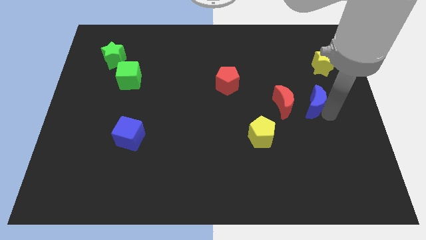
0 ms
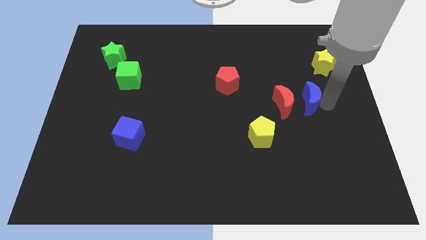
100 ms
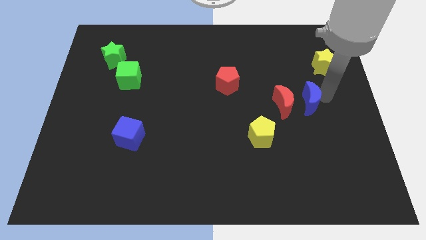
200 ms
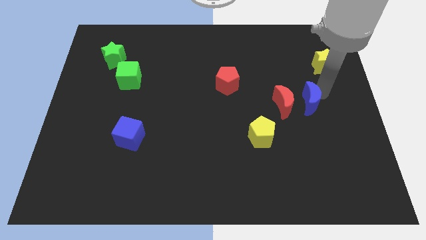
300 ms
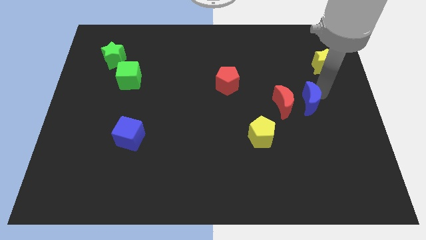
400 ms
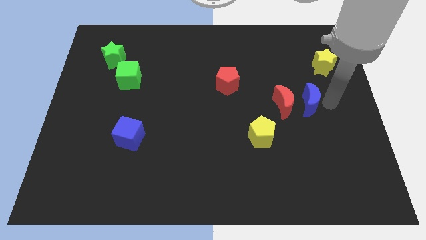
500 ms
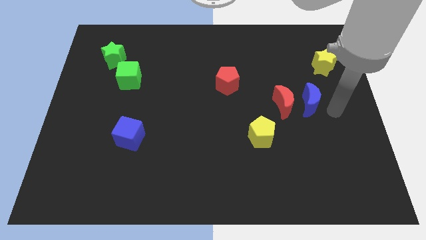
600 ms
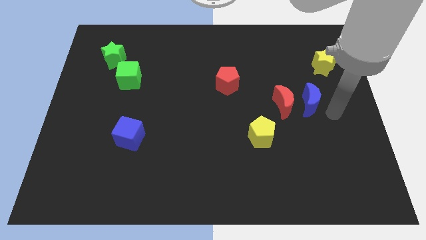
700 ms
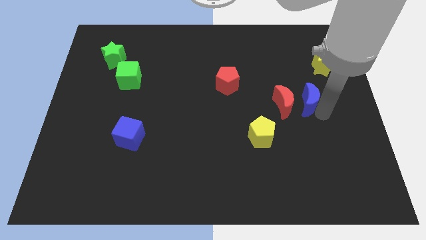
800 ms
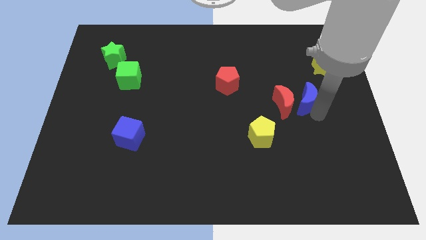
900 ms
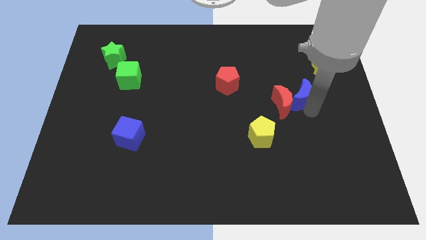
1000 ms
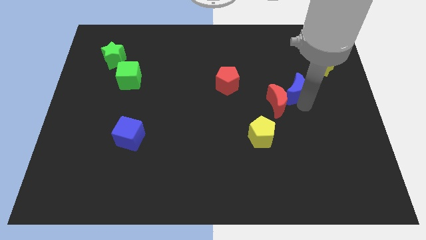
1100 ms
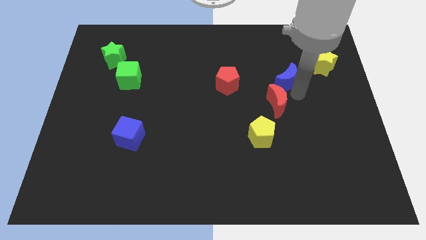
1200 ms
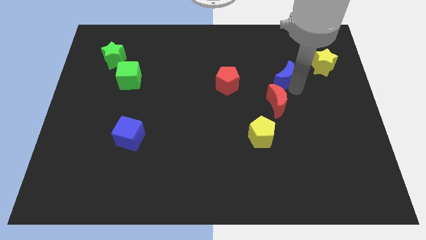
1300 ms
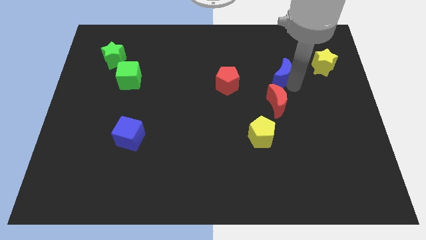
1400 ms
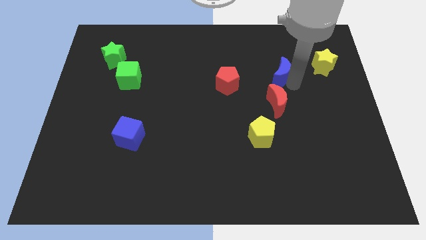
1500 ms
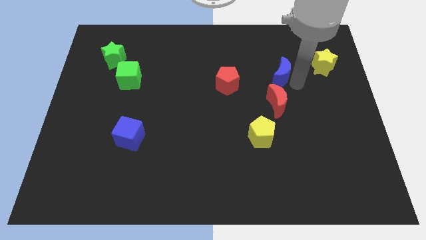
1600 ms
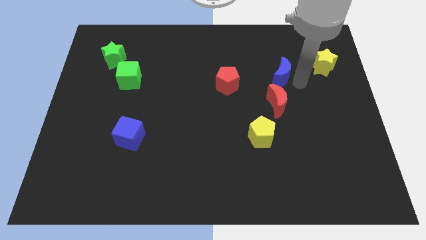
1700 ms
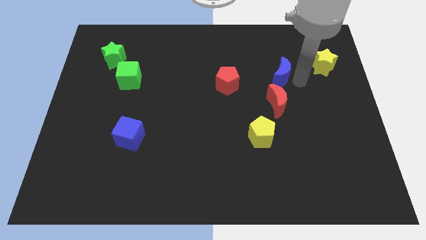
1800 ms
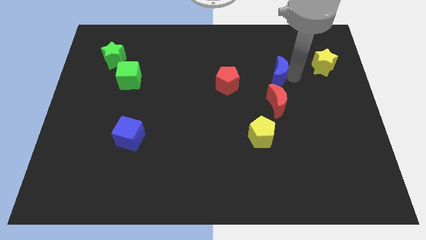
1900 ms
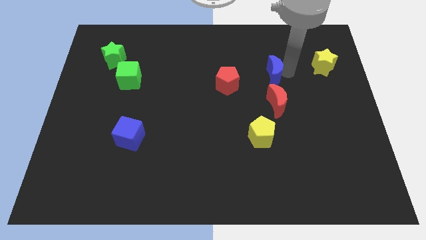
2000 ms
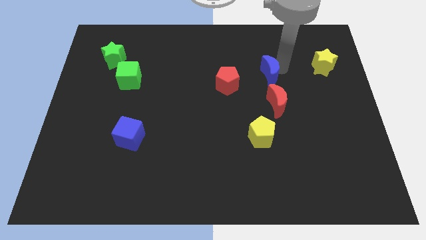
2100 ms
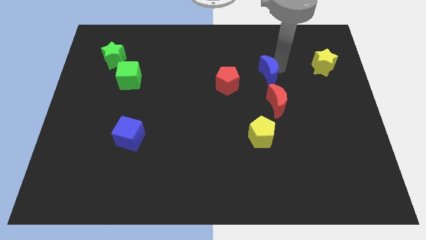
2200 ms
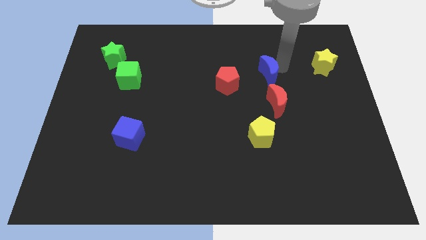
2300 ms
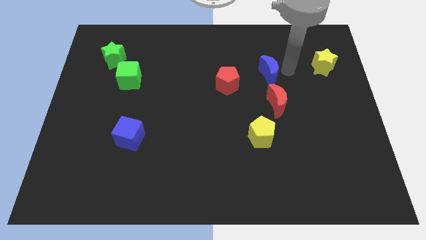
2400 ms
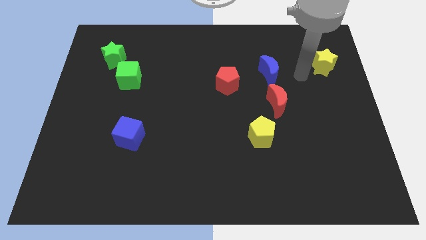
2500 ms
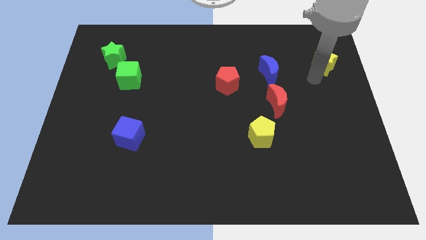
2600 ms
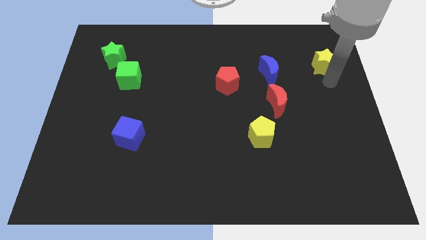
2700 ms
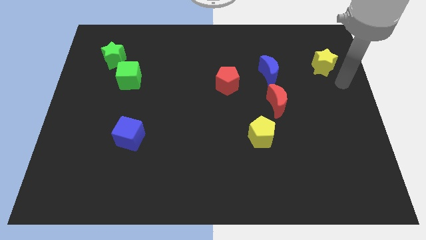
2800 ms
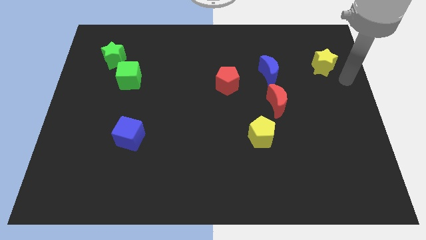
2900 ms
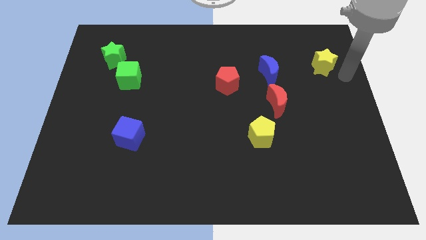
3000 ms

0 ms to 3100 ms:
slide the blue moon vertically above the red moon

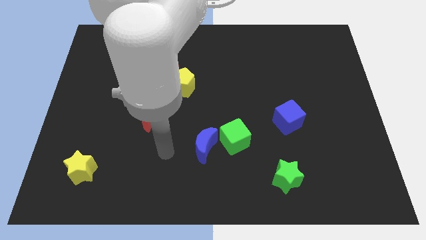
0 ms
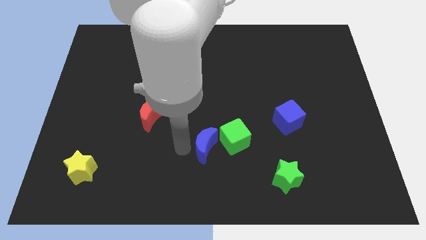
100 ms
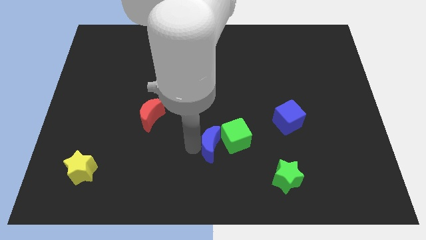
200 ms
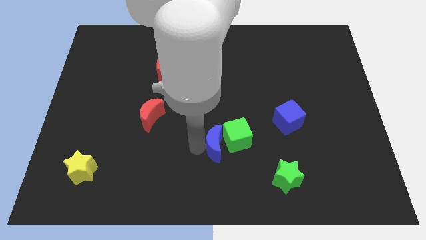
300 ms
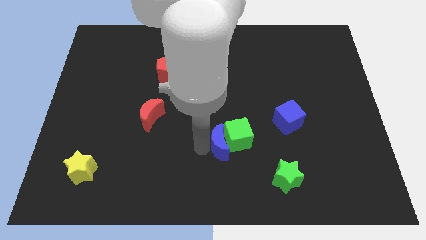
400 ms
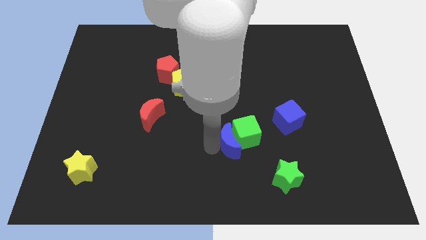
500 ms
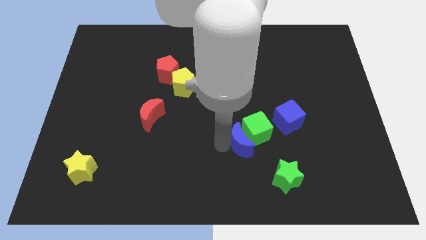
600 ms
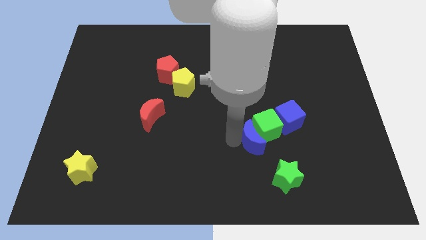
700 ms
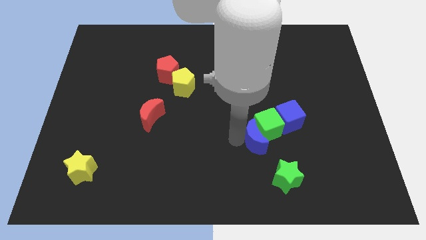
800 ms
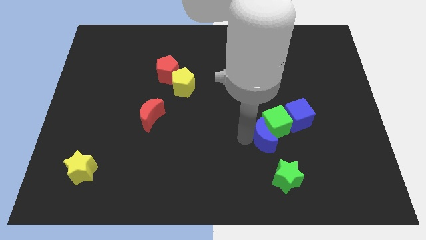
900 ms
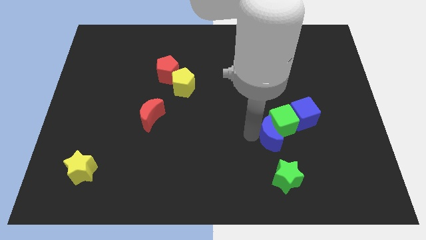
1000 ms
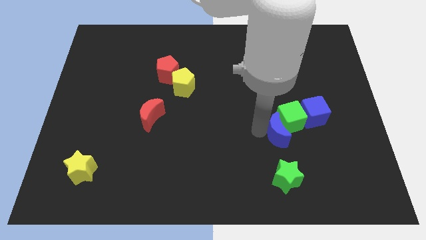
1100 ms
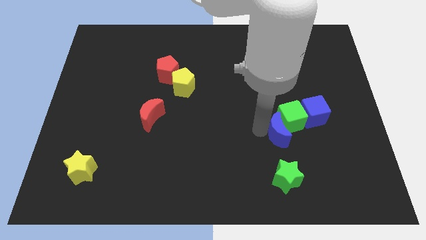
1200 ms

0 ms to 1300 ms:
push the cubes and blue moon towards the center right side of the board

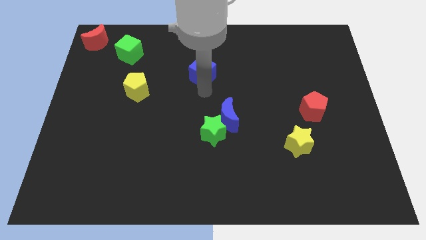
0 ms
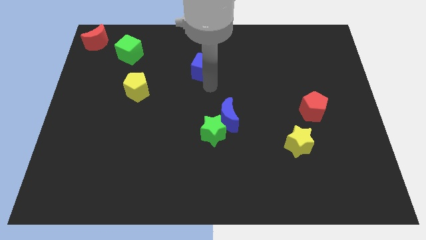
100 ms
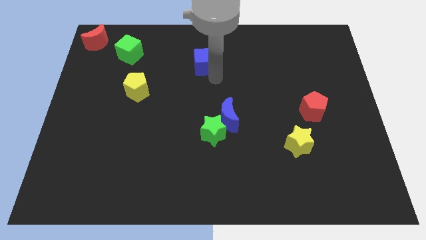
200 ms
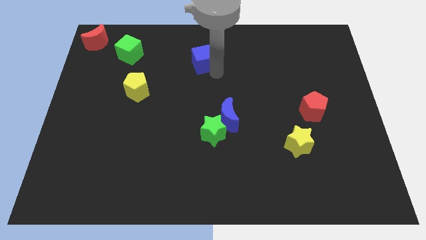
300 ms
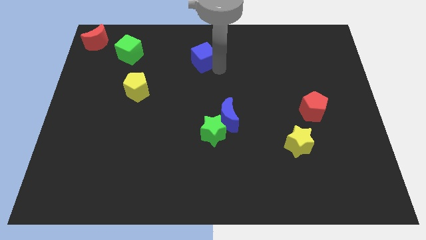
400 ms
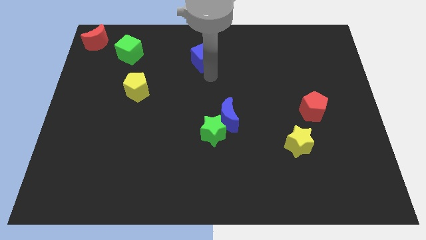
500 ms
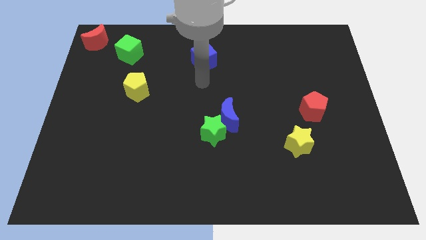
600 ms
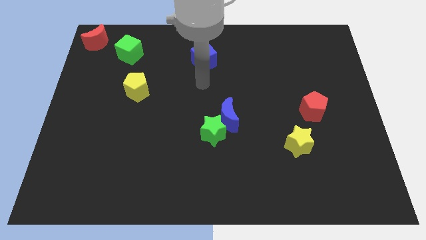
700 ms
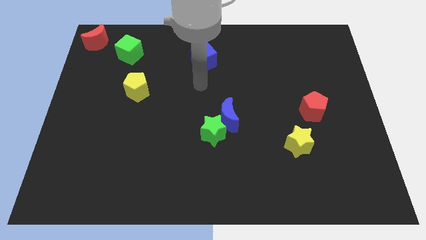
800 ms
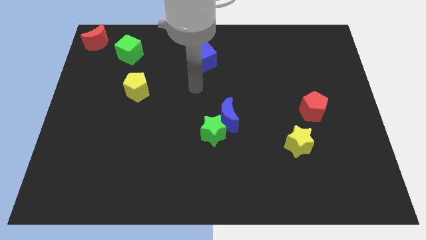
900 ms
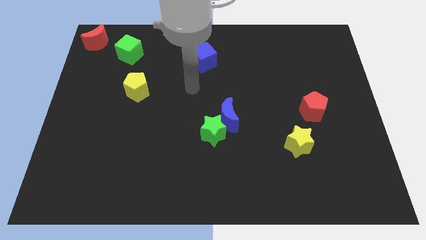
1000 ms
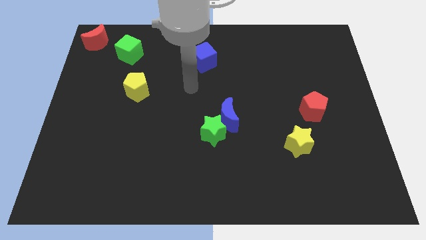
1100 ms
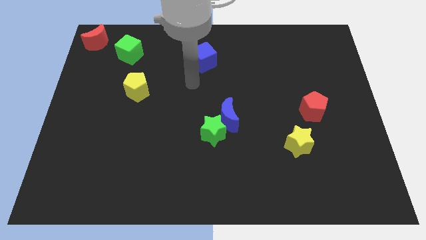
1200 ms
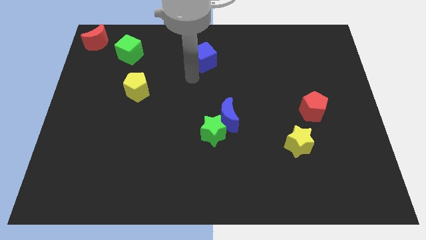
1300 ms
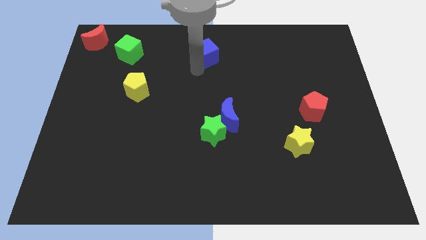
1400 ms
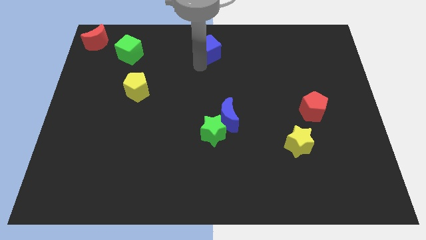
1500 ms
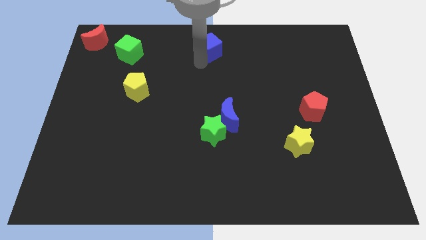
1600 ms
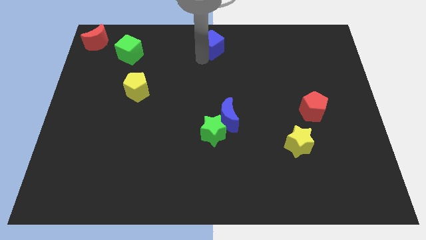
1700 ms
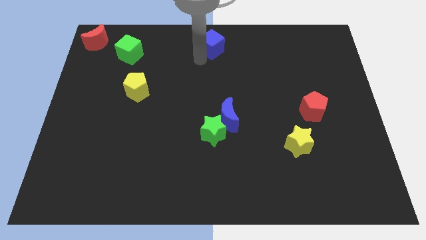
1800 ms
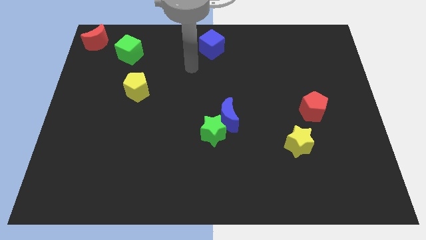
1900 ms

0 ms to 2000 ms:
push the blue cube to the top center of the board

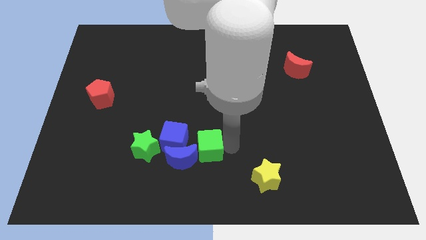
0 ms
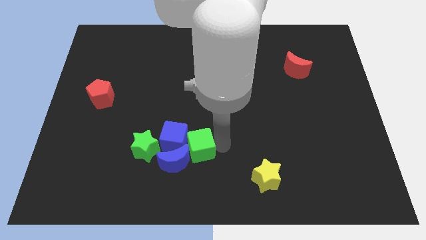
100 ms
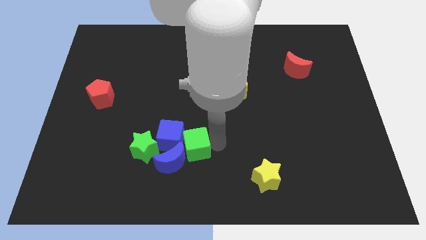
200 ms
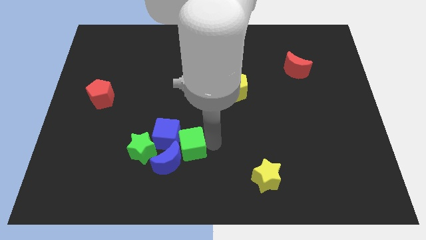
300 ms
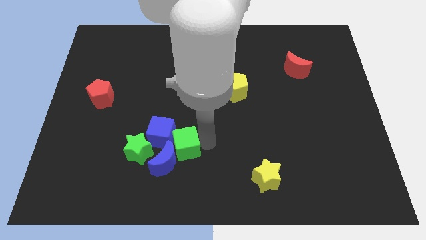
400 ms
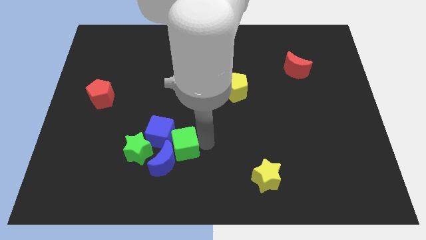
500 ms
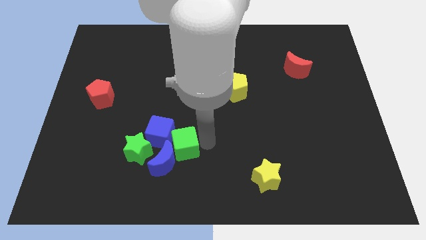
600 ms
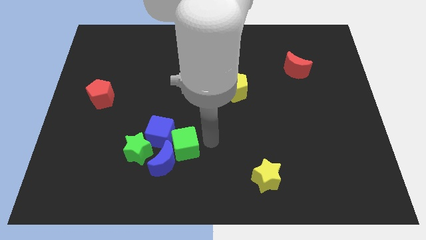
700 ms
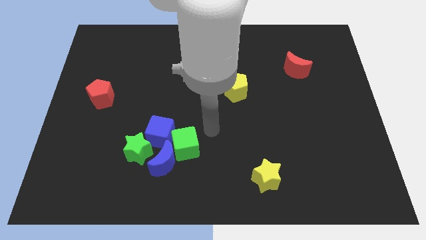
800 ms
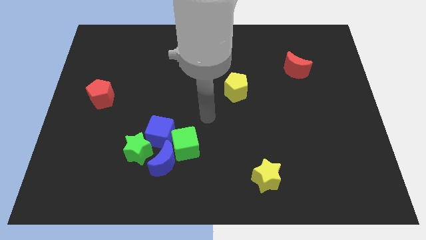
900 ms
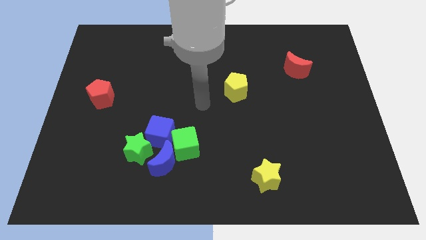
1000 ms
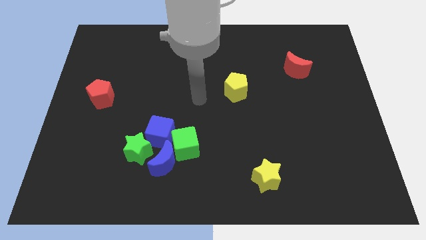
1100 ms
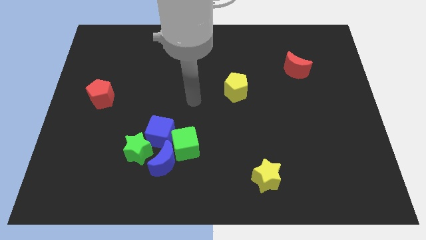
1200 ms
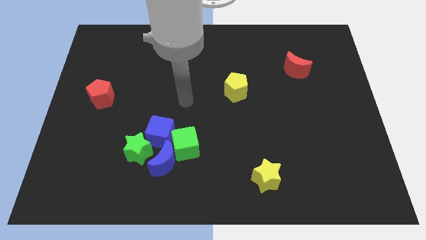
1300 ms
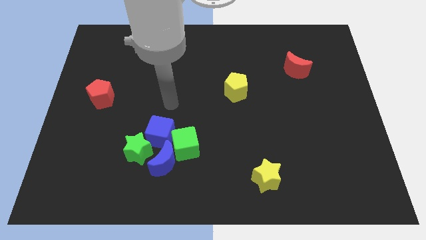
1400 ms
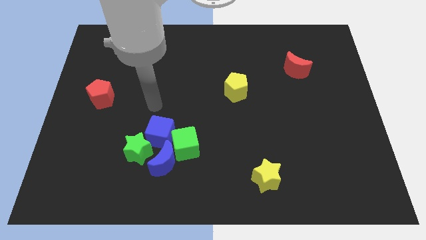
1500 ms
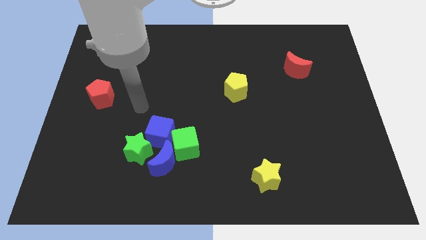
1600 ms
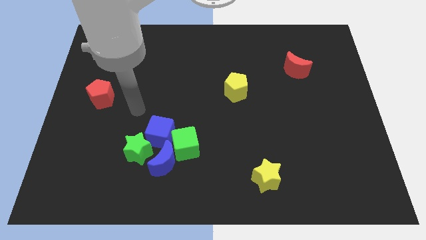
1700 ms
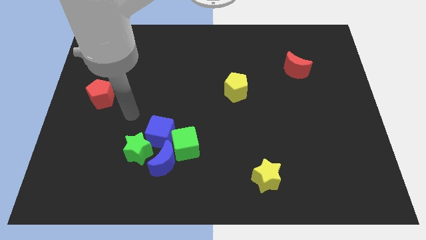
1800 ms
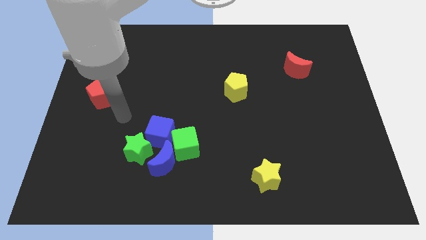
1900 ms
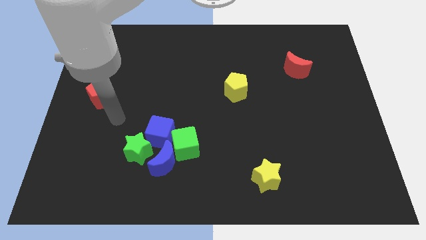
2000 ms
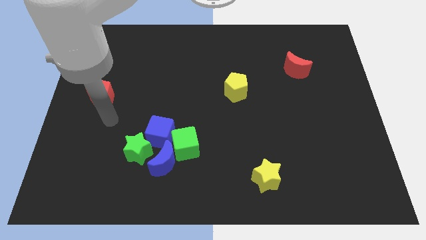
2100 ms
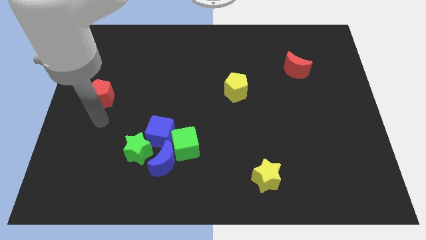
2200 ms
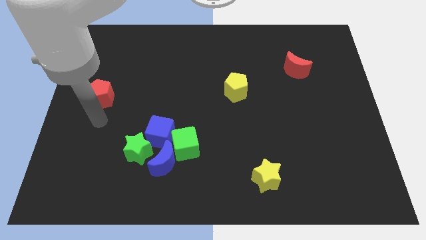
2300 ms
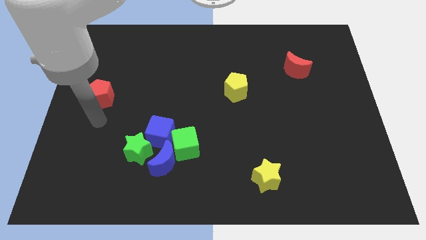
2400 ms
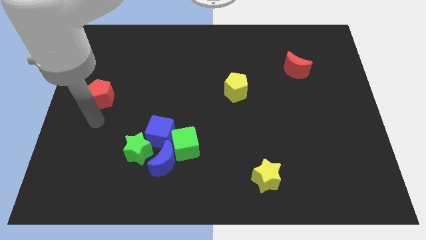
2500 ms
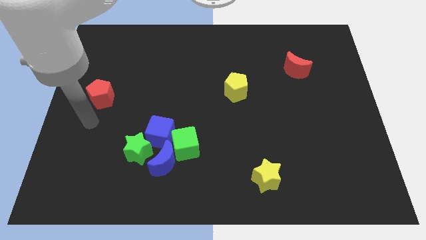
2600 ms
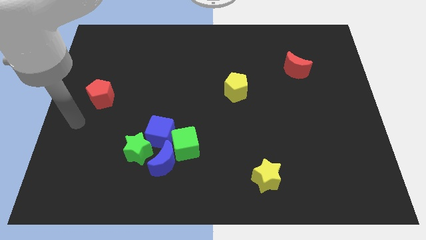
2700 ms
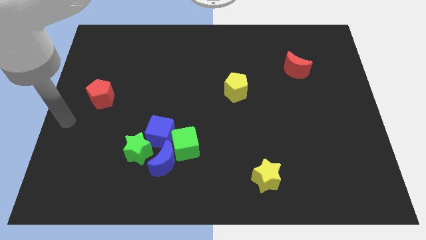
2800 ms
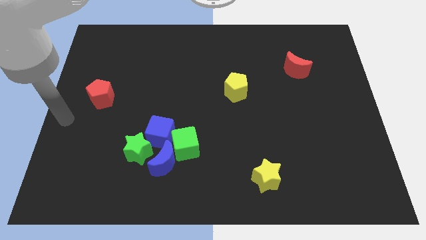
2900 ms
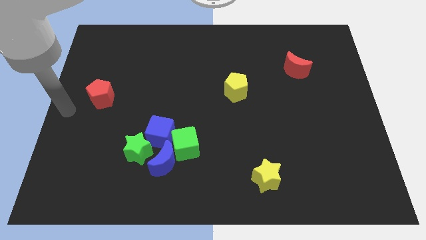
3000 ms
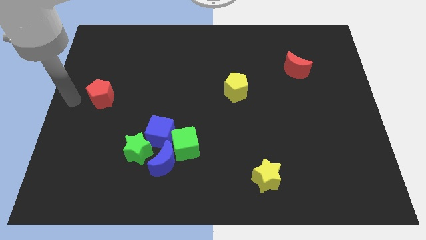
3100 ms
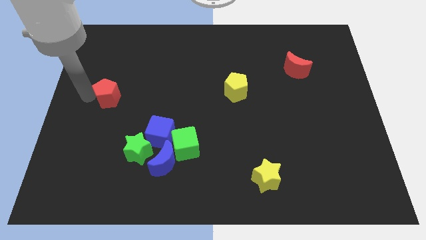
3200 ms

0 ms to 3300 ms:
move your arm to the left of the red pentagon
